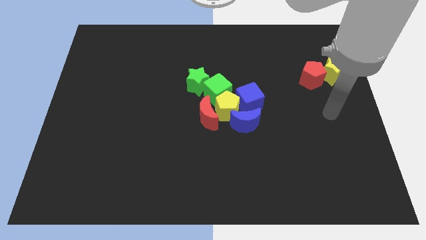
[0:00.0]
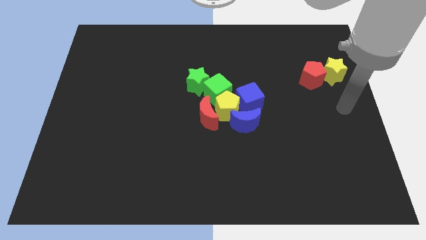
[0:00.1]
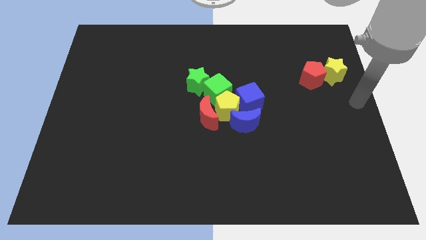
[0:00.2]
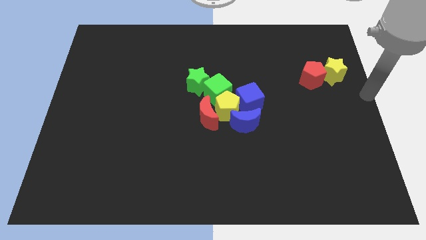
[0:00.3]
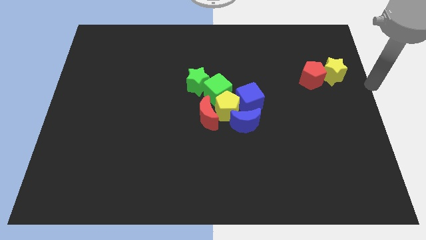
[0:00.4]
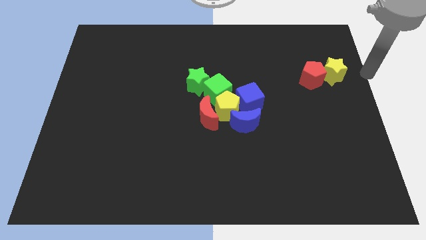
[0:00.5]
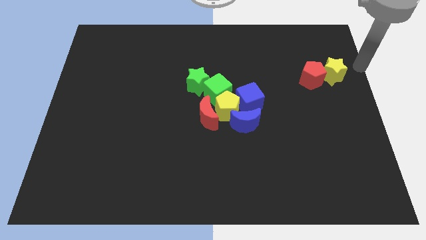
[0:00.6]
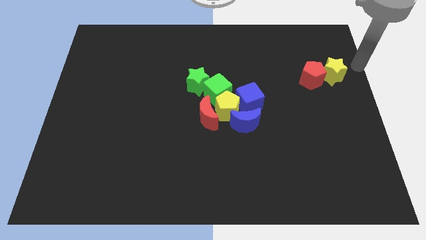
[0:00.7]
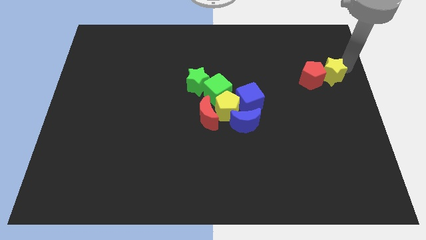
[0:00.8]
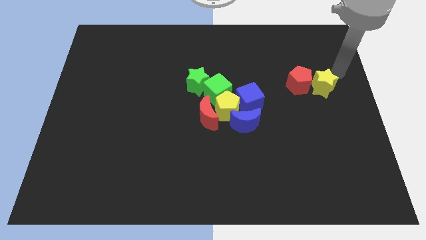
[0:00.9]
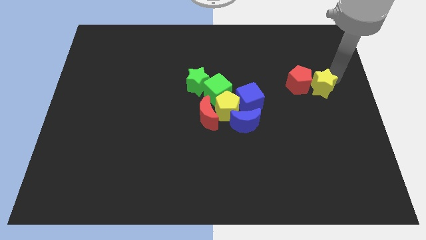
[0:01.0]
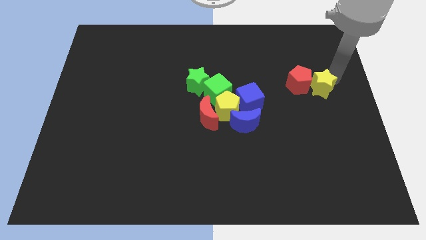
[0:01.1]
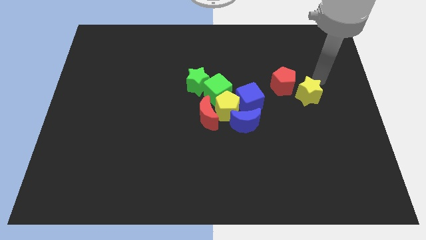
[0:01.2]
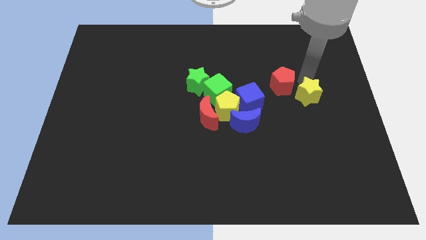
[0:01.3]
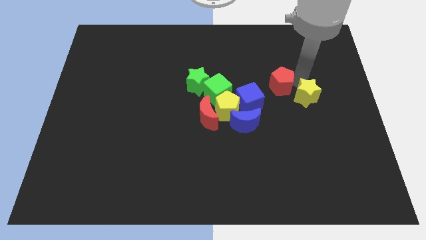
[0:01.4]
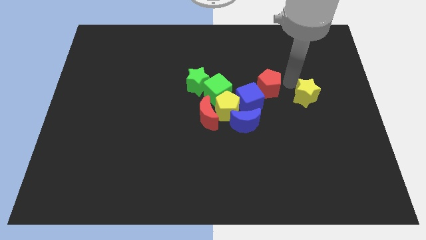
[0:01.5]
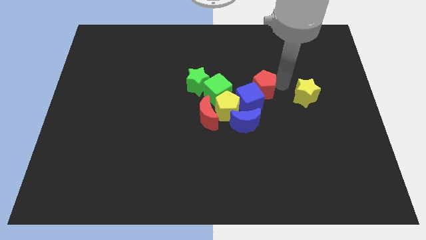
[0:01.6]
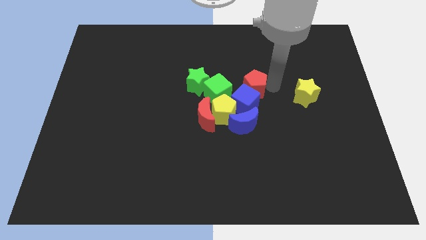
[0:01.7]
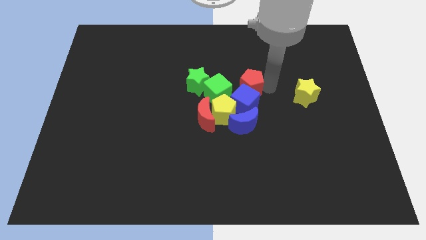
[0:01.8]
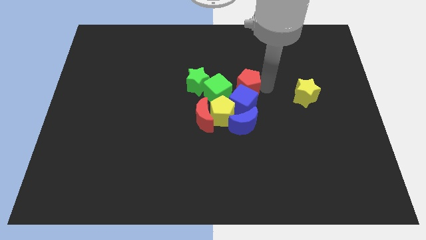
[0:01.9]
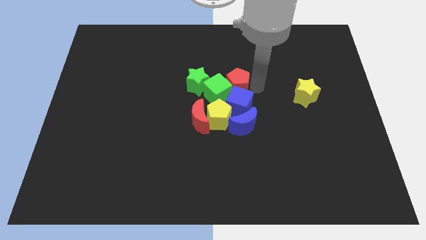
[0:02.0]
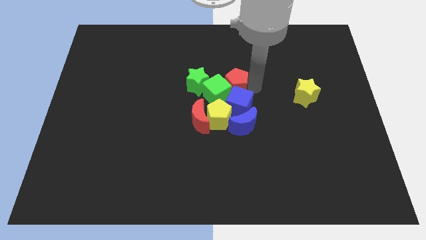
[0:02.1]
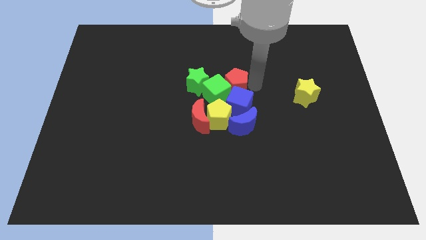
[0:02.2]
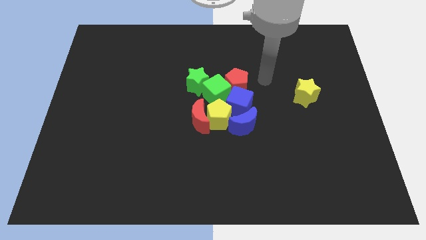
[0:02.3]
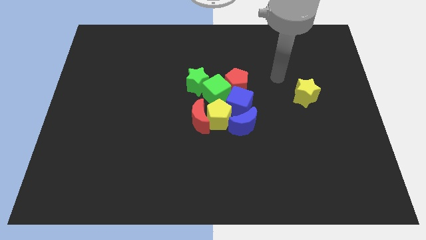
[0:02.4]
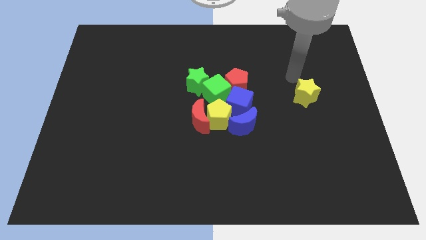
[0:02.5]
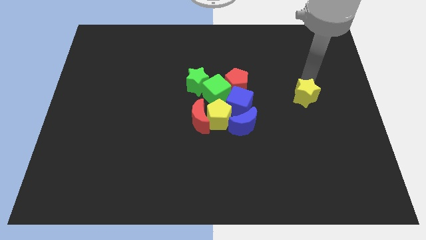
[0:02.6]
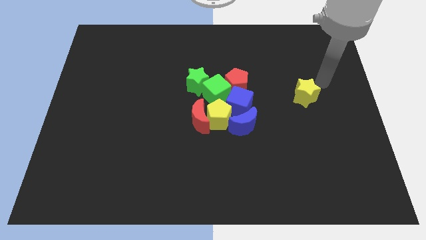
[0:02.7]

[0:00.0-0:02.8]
place red pentagon to the right of green cube

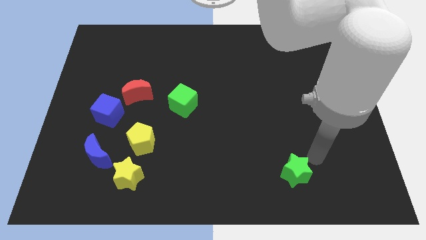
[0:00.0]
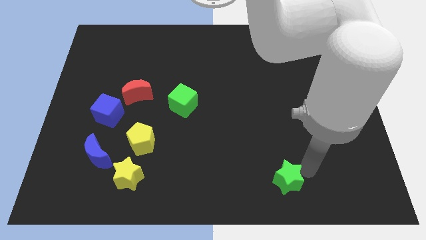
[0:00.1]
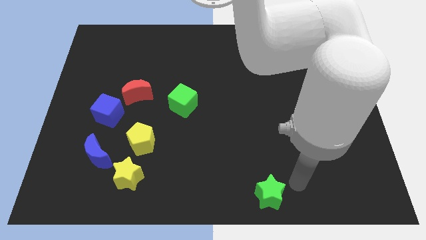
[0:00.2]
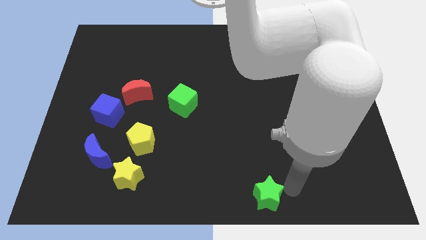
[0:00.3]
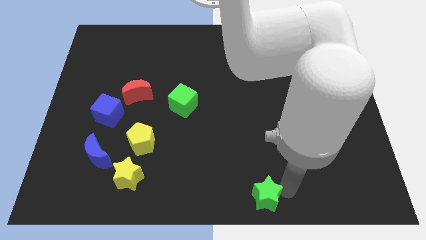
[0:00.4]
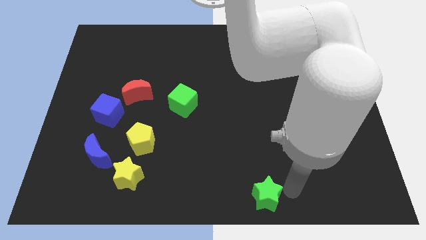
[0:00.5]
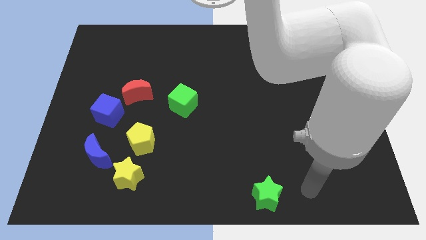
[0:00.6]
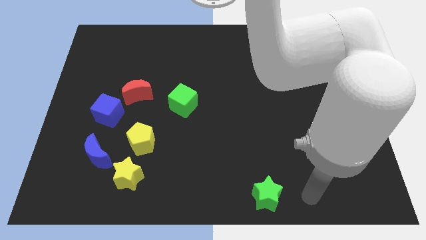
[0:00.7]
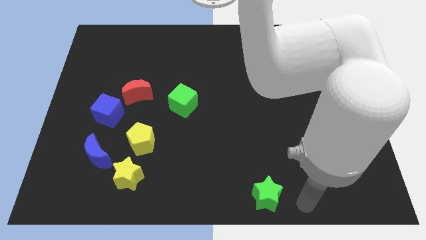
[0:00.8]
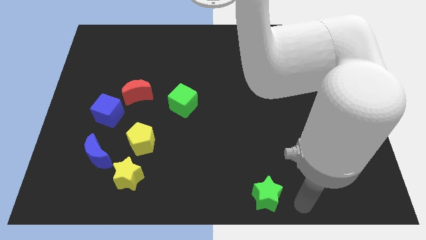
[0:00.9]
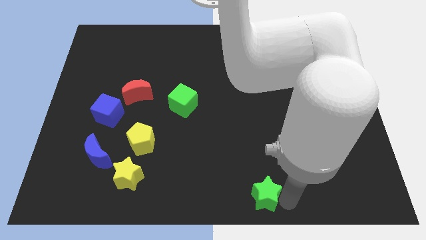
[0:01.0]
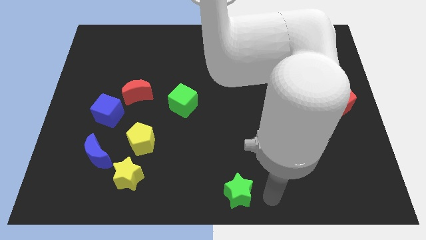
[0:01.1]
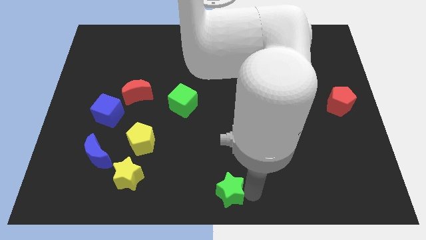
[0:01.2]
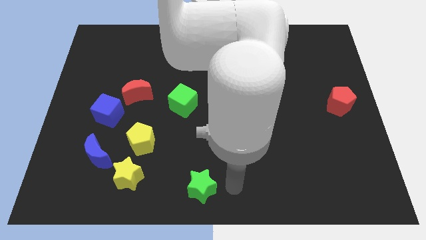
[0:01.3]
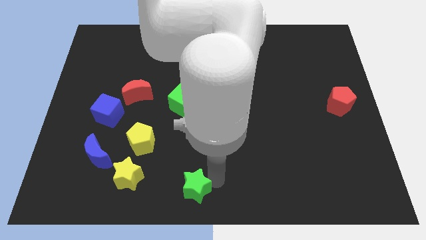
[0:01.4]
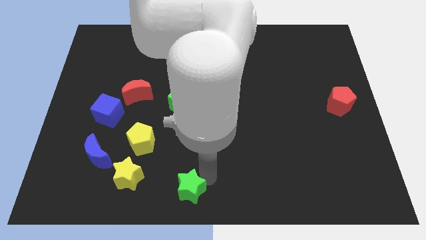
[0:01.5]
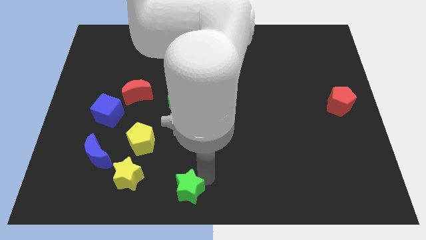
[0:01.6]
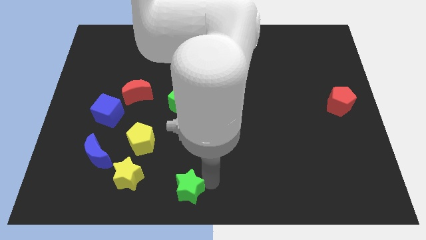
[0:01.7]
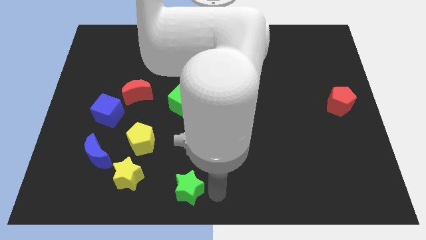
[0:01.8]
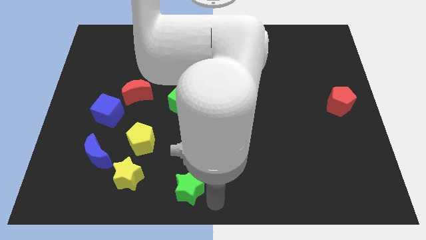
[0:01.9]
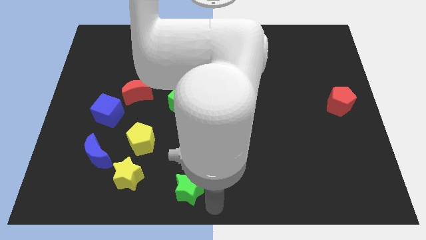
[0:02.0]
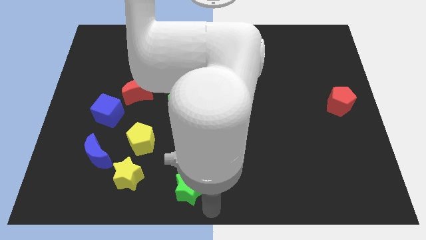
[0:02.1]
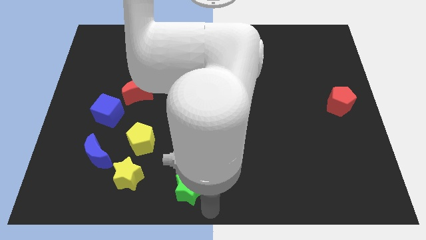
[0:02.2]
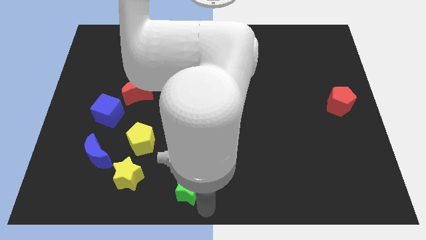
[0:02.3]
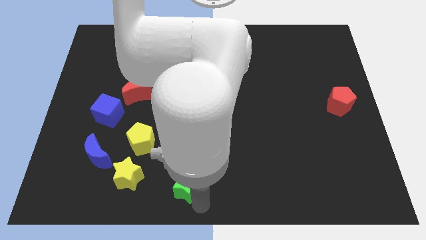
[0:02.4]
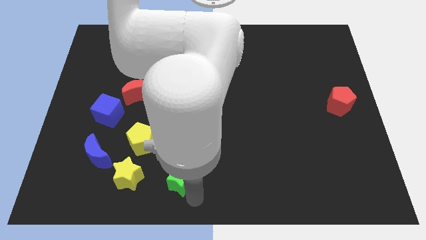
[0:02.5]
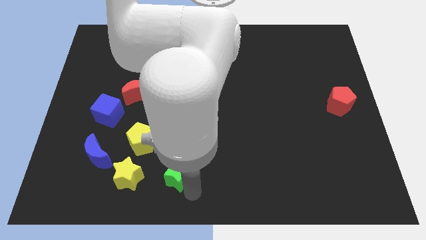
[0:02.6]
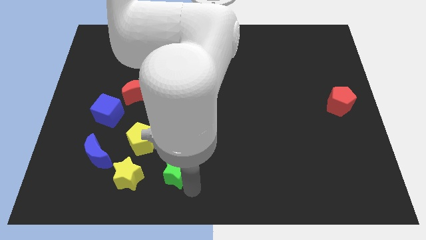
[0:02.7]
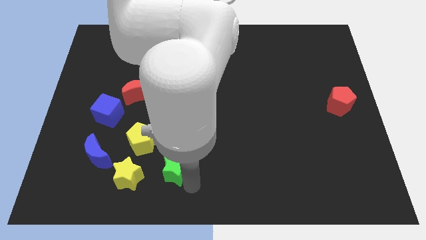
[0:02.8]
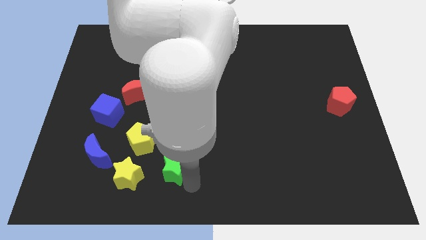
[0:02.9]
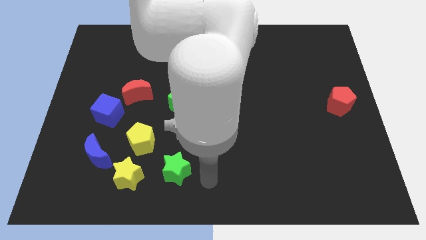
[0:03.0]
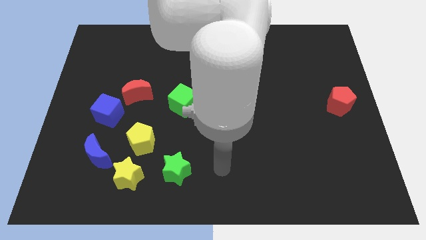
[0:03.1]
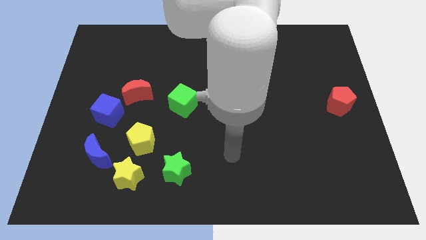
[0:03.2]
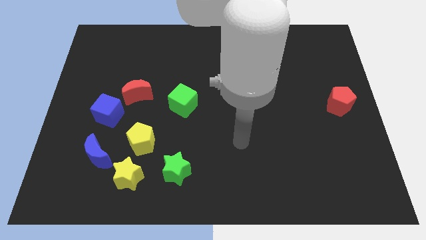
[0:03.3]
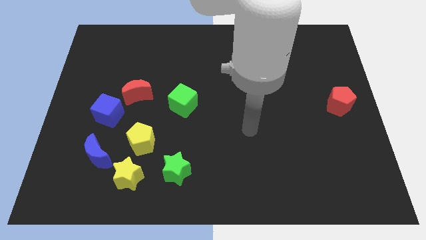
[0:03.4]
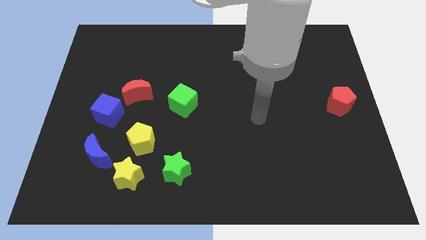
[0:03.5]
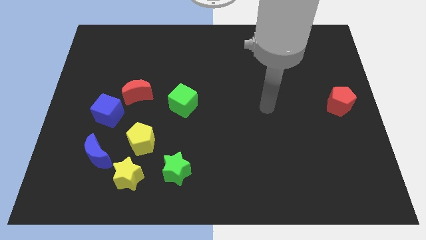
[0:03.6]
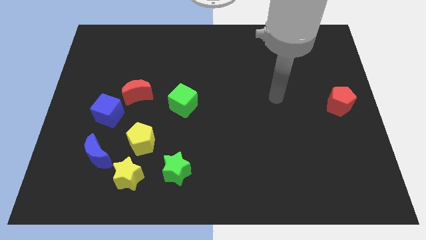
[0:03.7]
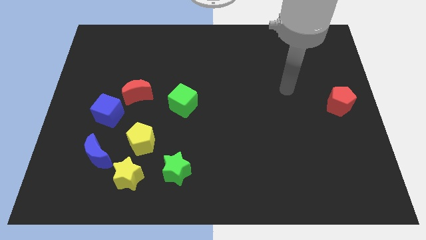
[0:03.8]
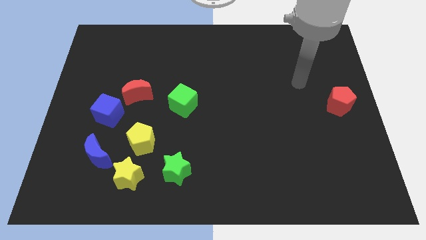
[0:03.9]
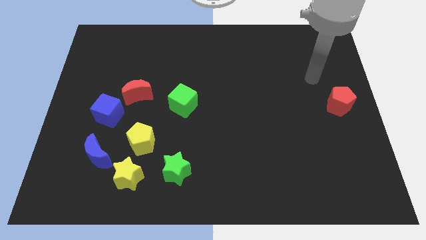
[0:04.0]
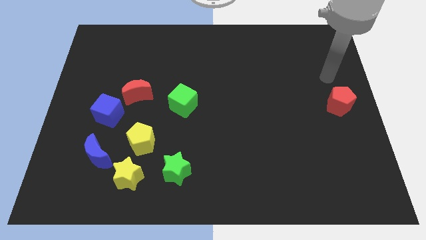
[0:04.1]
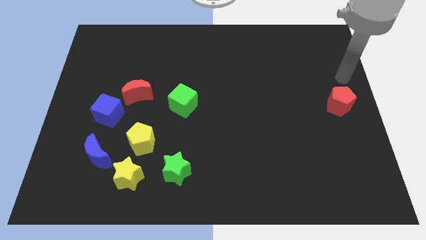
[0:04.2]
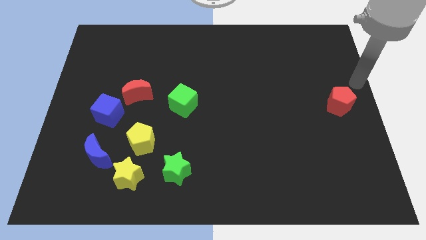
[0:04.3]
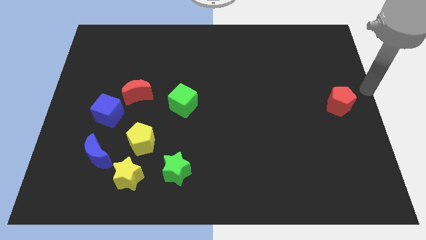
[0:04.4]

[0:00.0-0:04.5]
place the green star vertically below the green cube

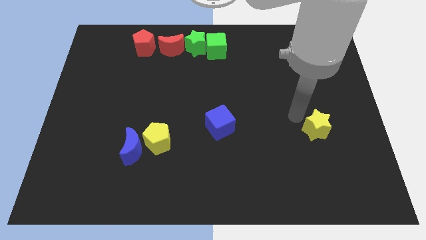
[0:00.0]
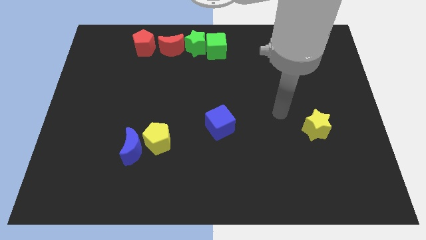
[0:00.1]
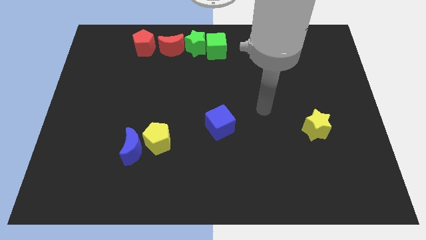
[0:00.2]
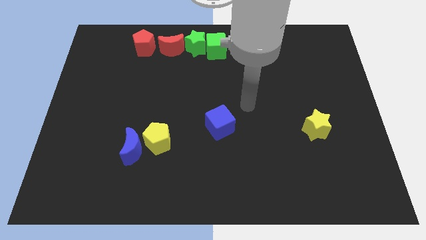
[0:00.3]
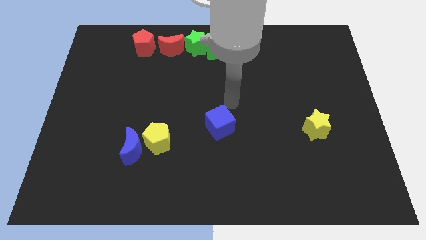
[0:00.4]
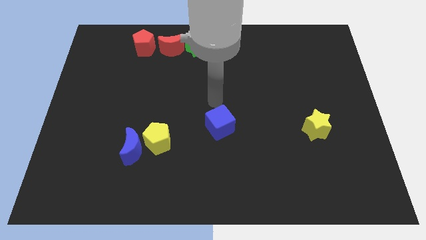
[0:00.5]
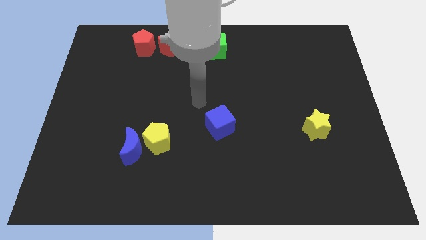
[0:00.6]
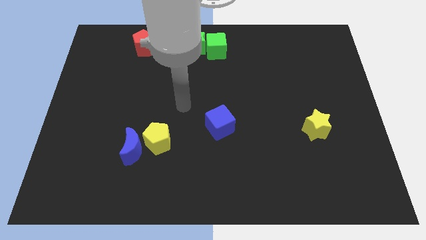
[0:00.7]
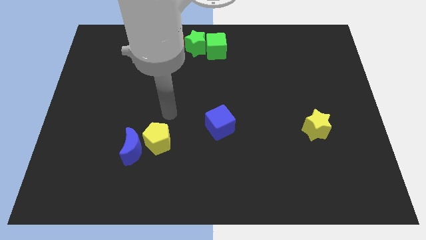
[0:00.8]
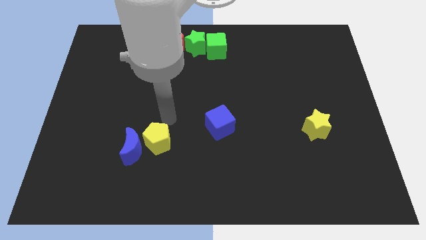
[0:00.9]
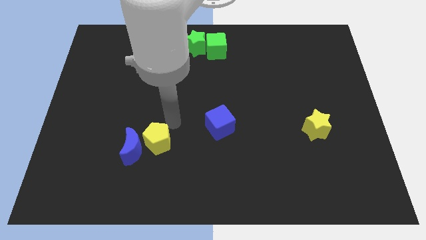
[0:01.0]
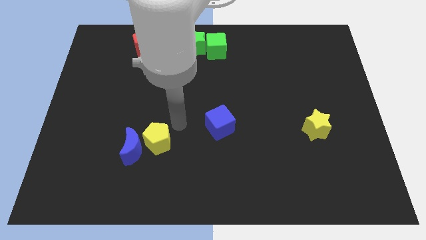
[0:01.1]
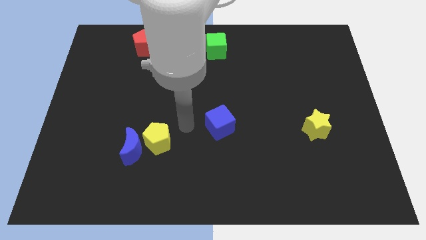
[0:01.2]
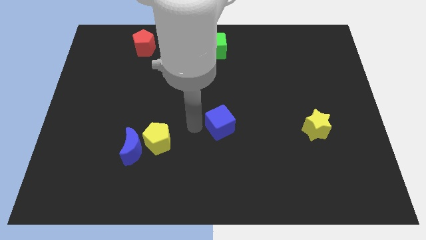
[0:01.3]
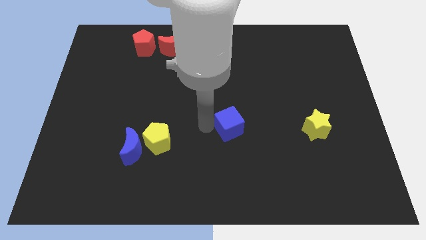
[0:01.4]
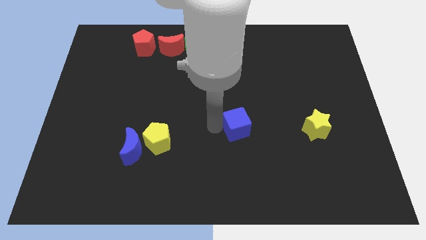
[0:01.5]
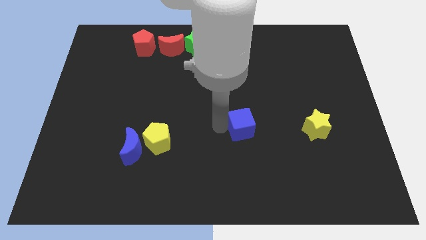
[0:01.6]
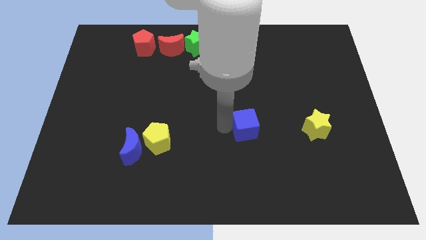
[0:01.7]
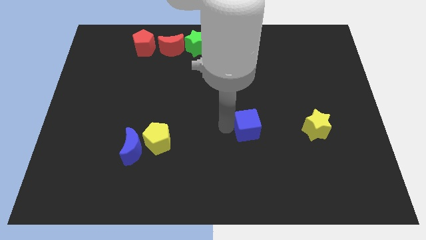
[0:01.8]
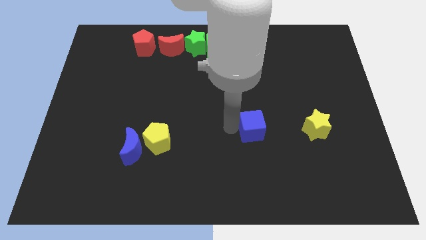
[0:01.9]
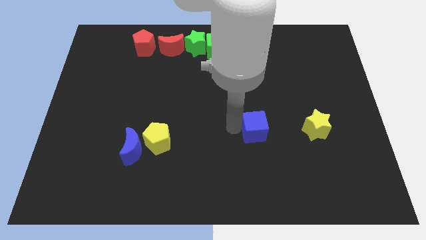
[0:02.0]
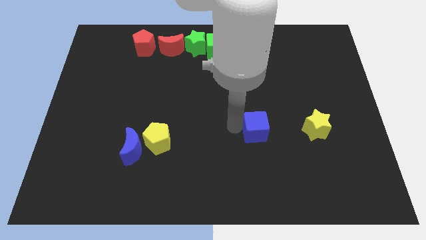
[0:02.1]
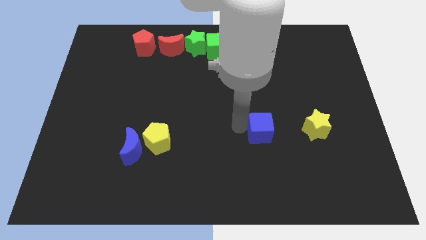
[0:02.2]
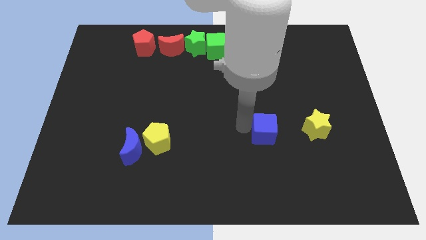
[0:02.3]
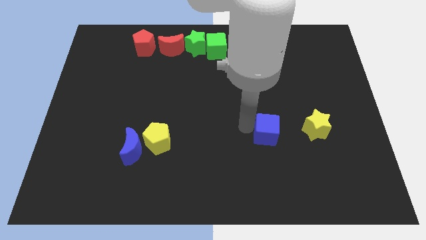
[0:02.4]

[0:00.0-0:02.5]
push the blue cube towards yellow star
